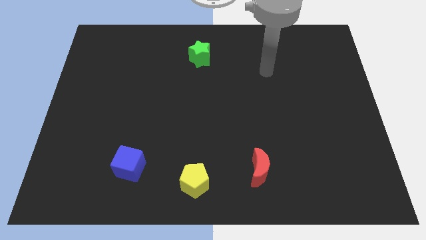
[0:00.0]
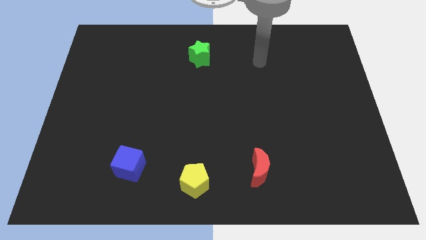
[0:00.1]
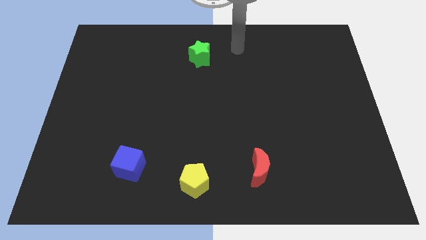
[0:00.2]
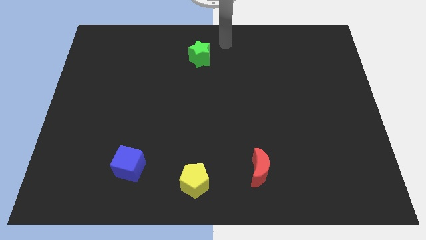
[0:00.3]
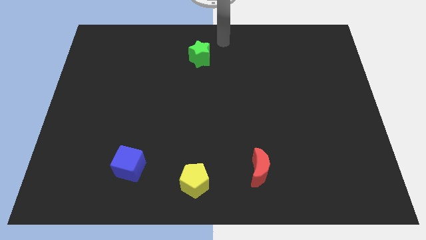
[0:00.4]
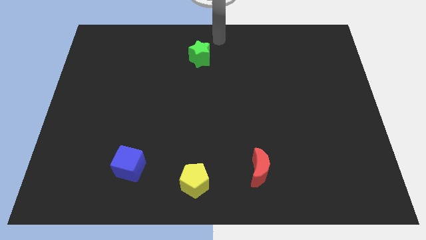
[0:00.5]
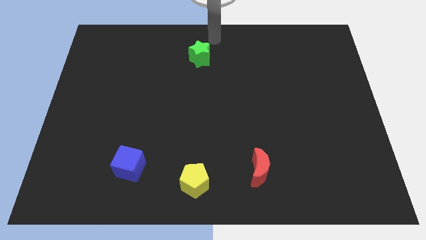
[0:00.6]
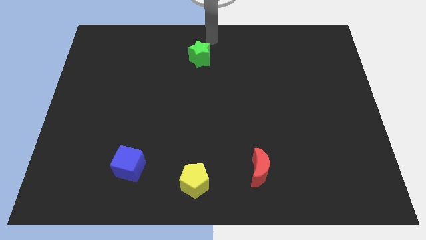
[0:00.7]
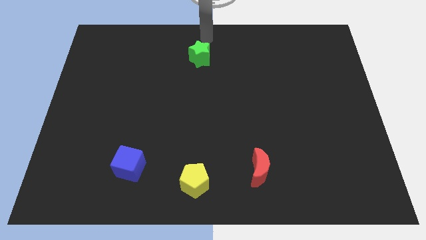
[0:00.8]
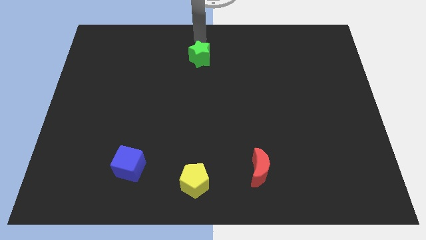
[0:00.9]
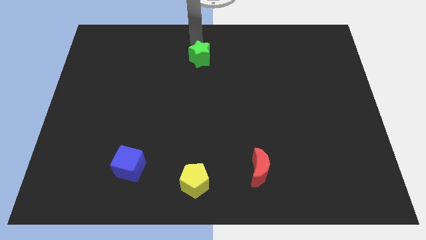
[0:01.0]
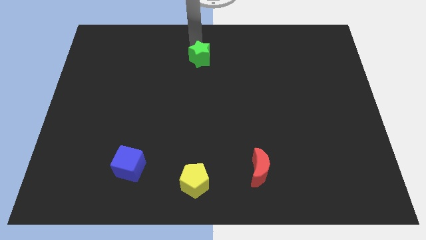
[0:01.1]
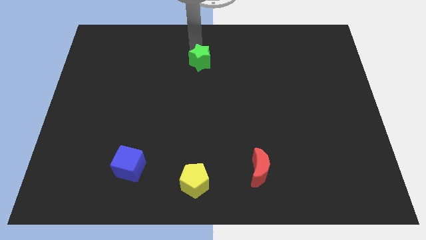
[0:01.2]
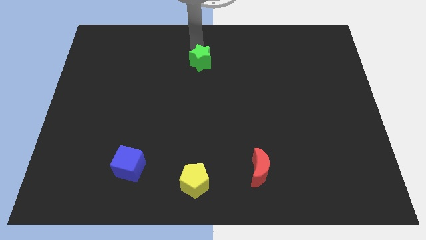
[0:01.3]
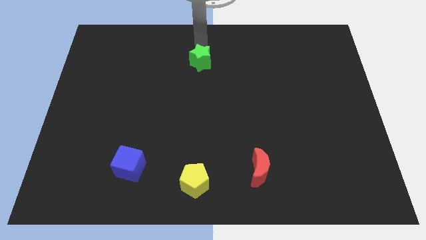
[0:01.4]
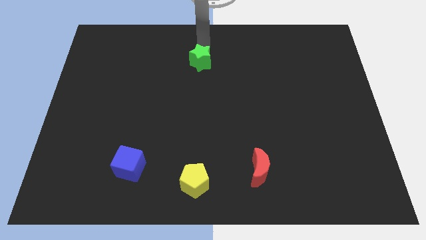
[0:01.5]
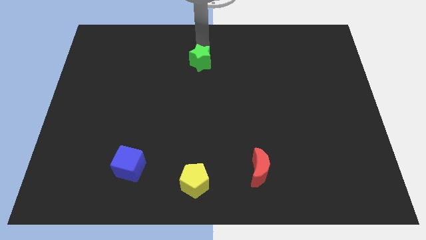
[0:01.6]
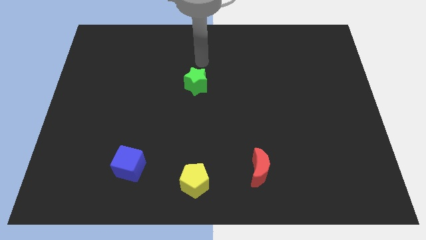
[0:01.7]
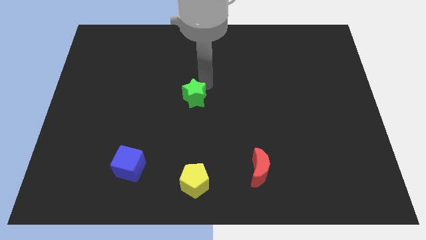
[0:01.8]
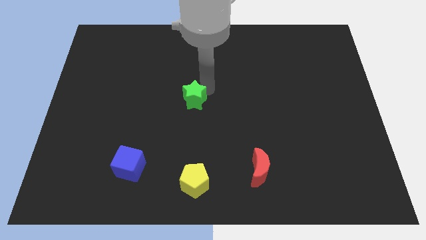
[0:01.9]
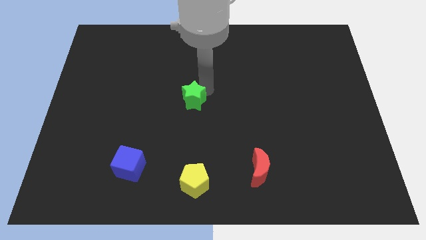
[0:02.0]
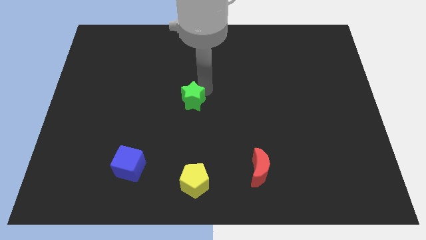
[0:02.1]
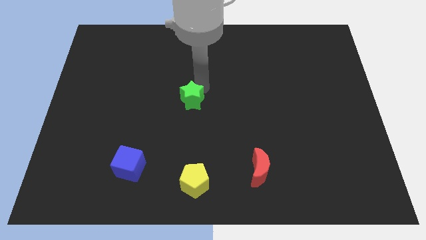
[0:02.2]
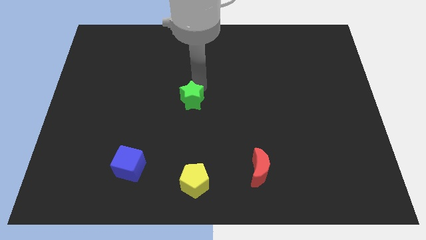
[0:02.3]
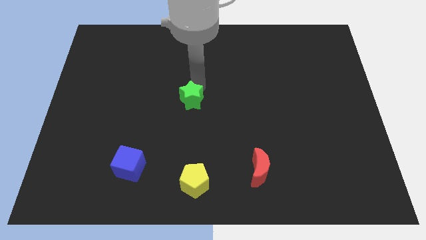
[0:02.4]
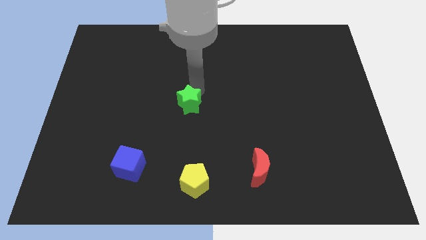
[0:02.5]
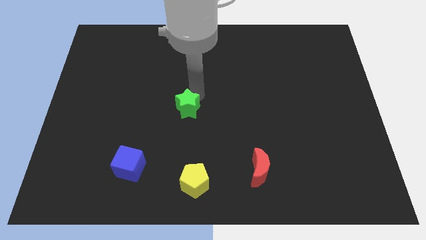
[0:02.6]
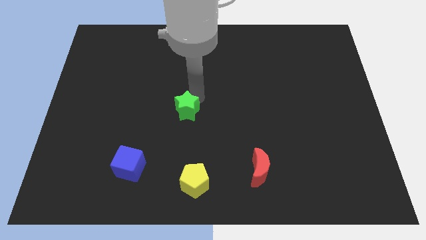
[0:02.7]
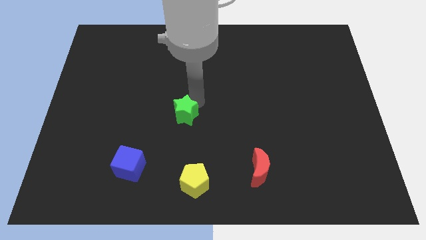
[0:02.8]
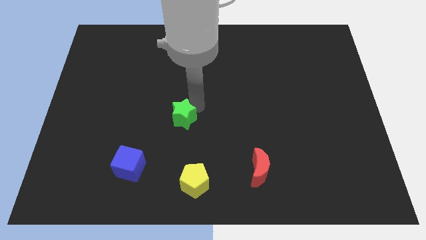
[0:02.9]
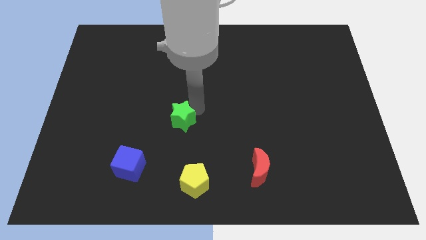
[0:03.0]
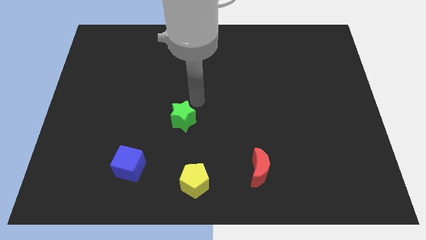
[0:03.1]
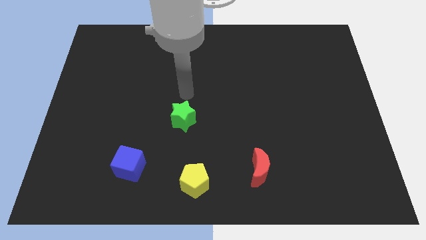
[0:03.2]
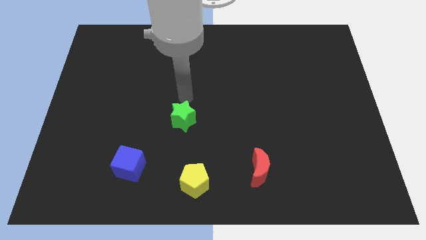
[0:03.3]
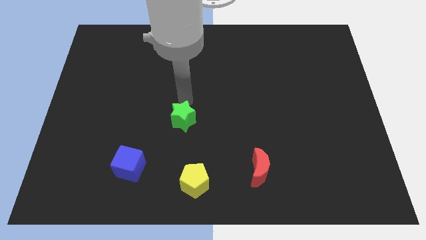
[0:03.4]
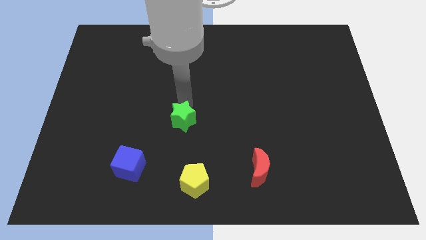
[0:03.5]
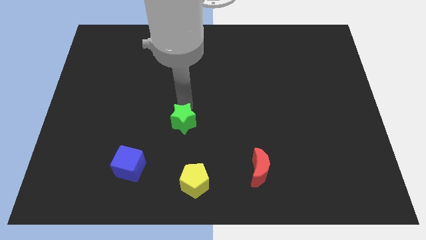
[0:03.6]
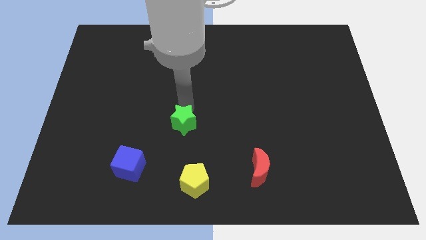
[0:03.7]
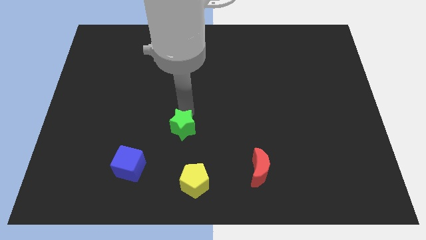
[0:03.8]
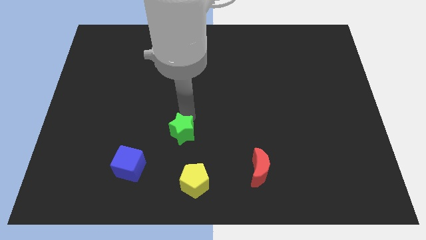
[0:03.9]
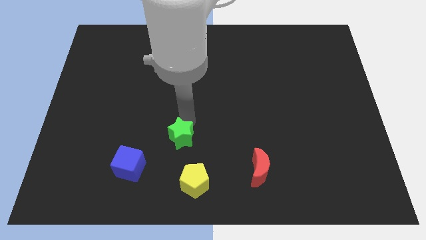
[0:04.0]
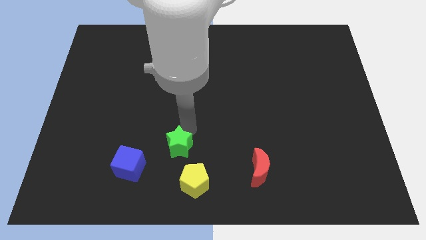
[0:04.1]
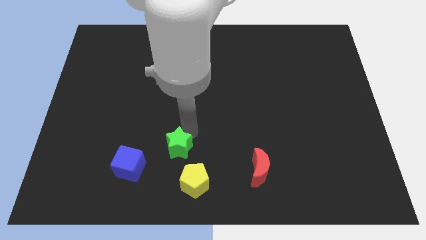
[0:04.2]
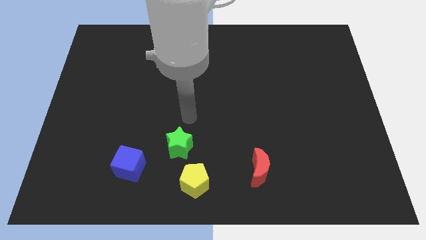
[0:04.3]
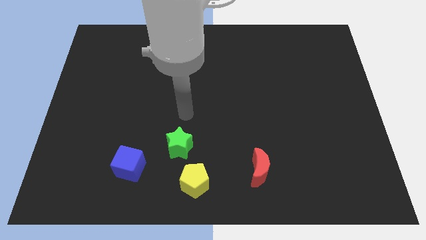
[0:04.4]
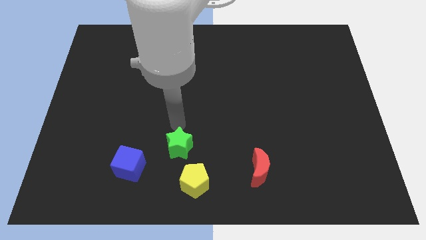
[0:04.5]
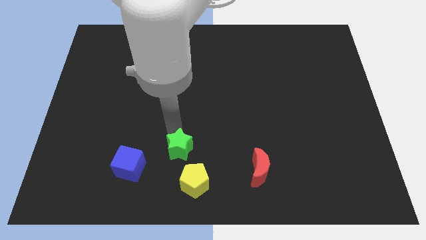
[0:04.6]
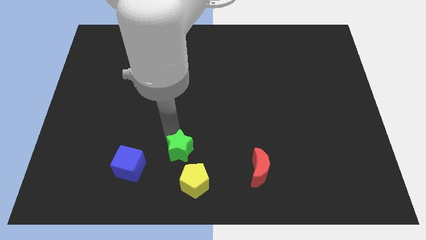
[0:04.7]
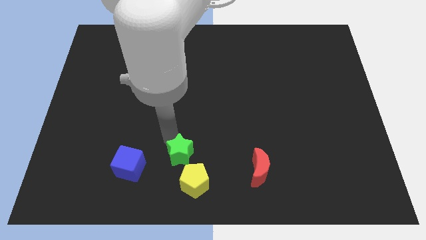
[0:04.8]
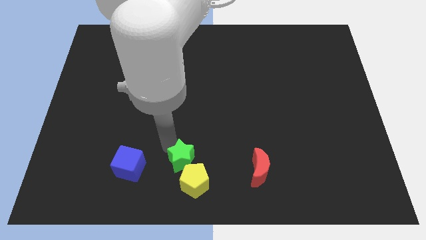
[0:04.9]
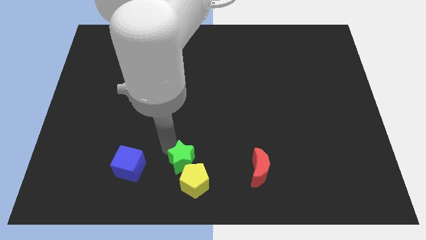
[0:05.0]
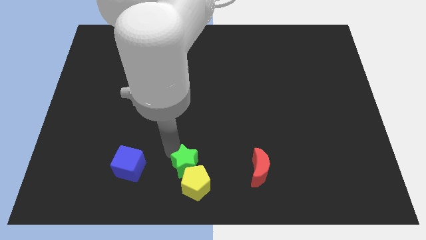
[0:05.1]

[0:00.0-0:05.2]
move the green block next to the yellow block

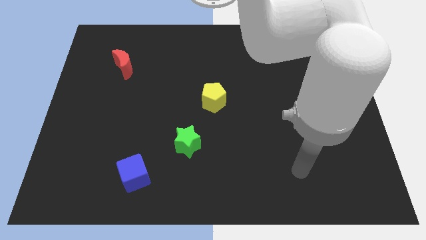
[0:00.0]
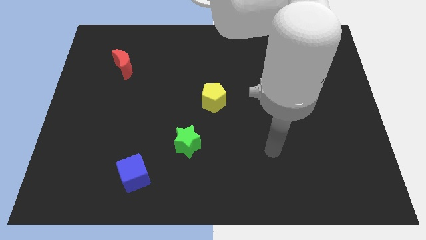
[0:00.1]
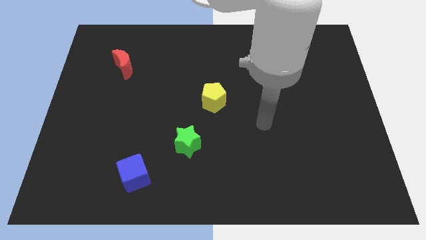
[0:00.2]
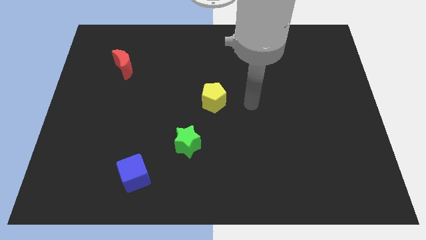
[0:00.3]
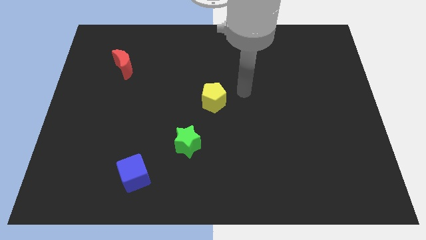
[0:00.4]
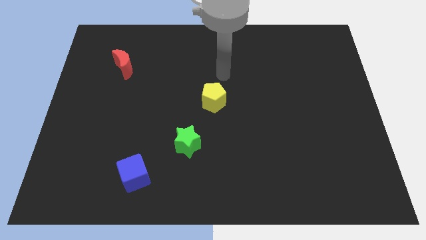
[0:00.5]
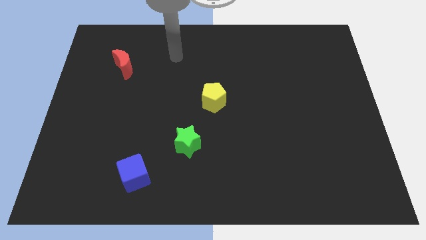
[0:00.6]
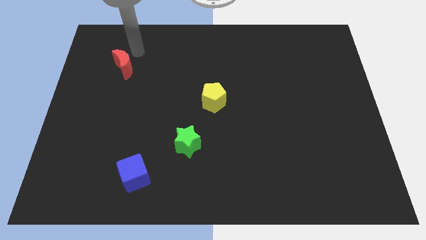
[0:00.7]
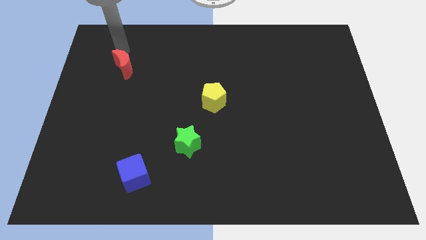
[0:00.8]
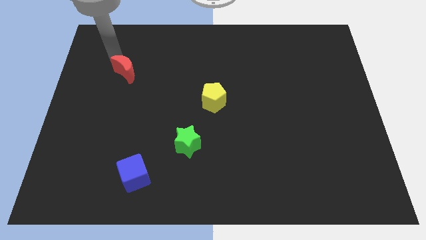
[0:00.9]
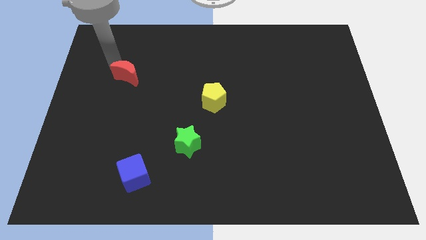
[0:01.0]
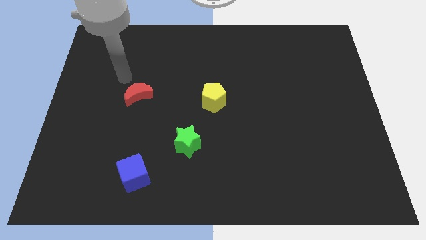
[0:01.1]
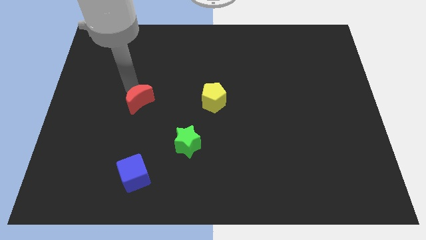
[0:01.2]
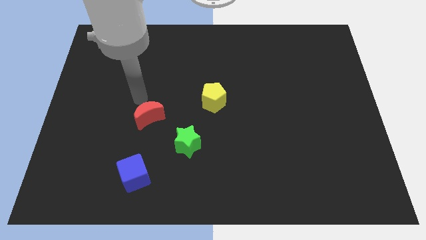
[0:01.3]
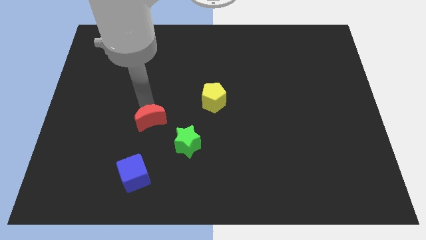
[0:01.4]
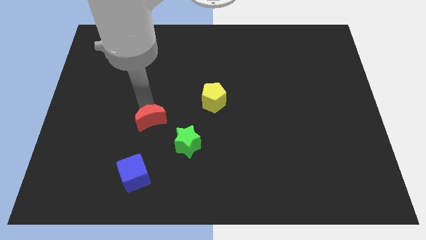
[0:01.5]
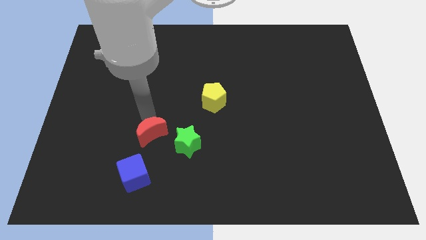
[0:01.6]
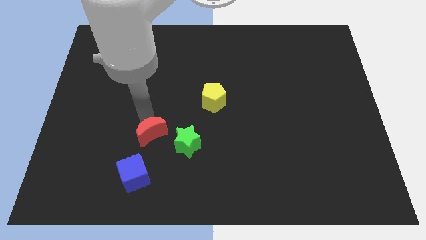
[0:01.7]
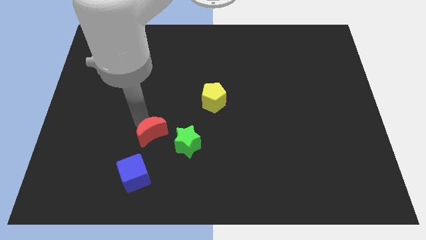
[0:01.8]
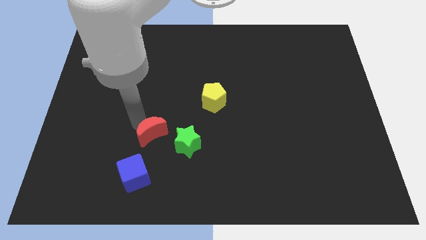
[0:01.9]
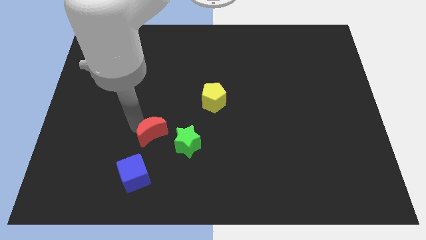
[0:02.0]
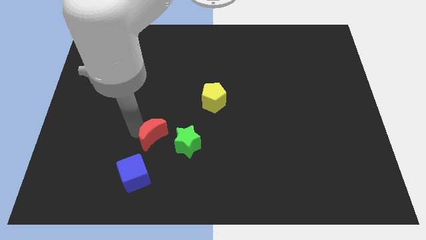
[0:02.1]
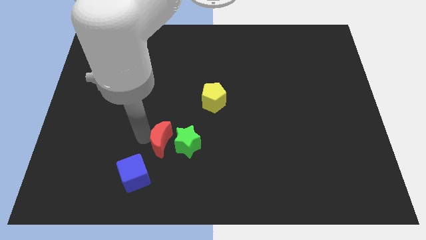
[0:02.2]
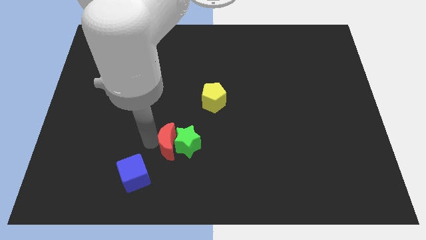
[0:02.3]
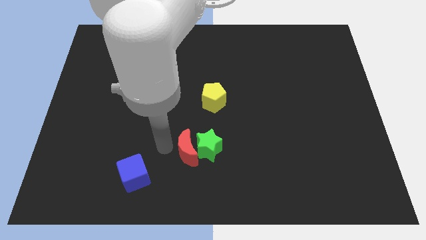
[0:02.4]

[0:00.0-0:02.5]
put the red moon towards the star

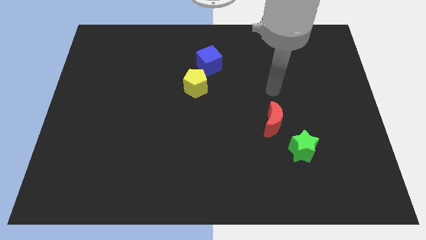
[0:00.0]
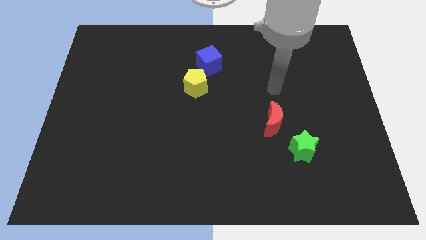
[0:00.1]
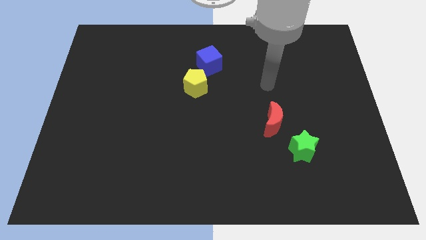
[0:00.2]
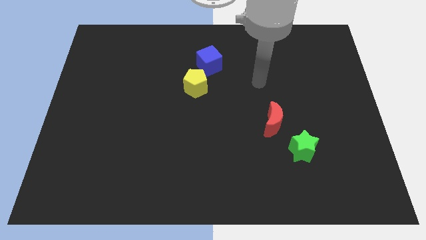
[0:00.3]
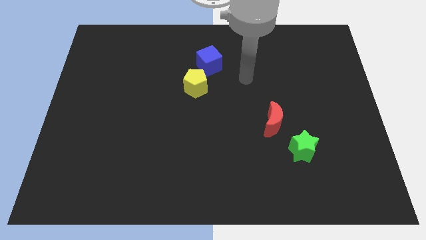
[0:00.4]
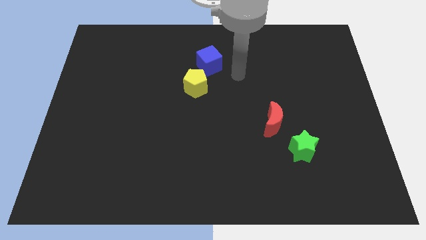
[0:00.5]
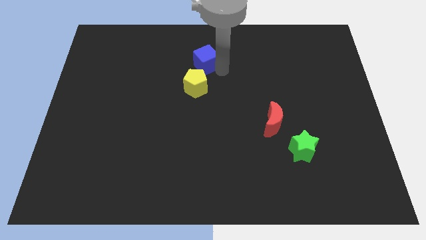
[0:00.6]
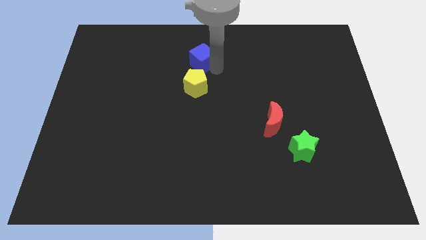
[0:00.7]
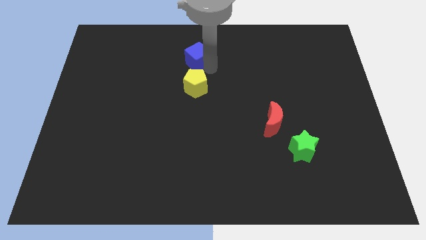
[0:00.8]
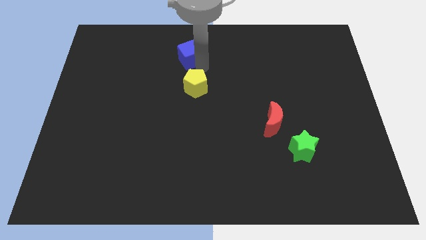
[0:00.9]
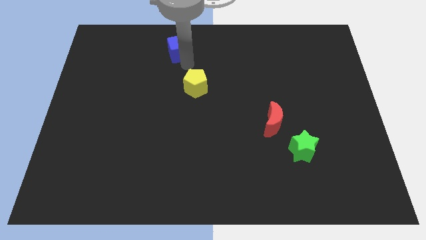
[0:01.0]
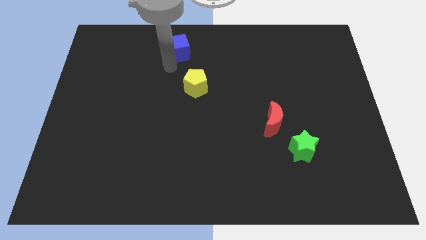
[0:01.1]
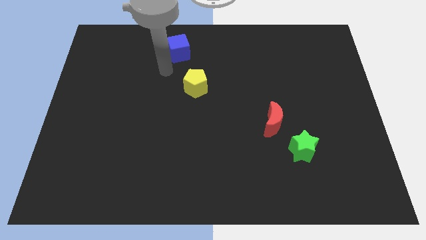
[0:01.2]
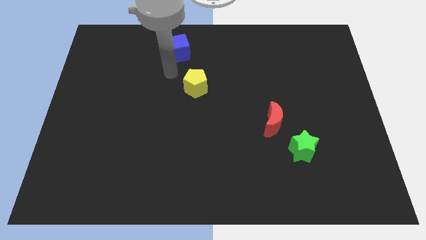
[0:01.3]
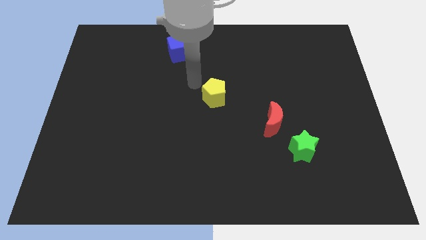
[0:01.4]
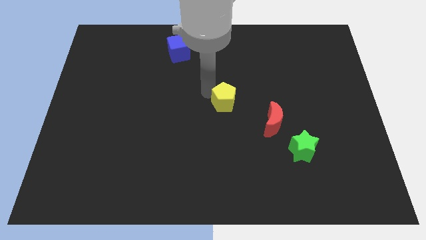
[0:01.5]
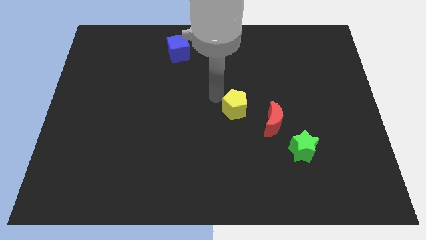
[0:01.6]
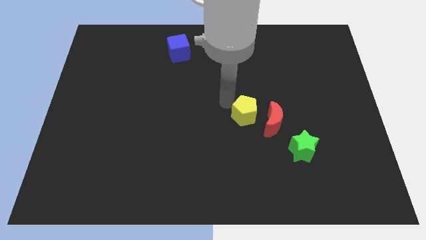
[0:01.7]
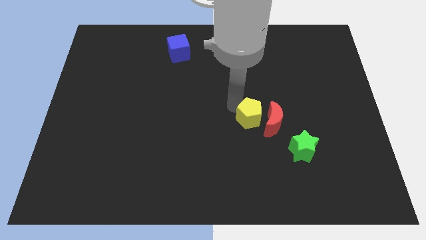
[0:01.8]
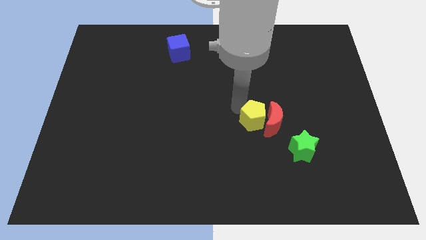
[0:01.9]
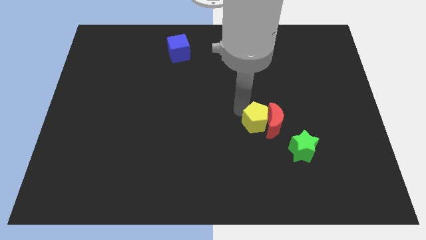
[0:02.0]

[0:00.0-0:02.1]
move the yellow pentagon close to the moon
